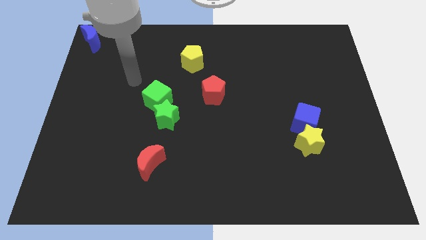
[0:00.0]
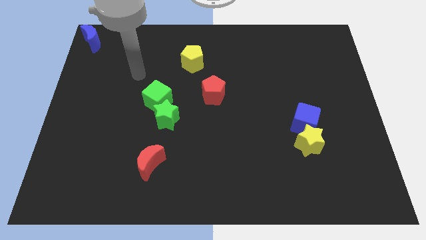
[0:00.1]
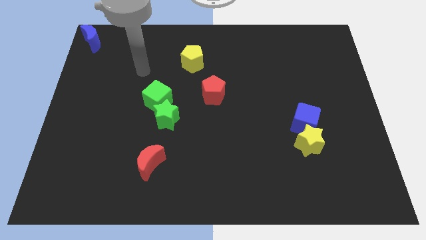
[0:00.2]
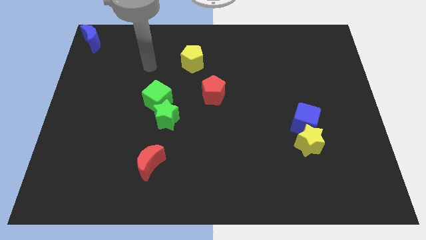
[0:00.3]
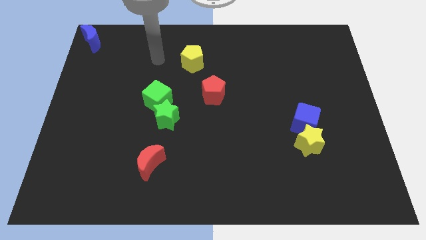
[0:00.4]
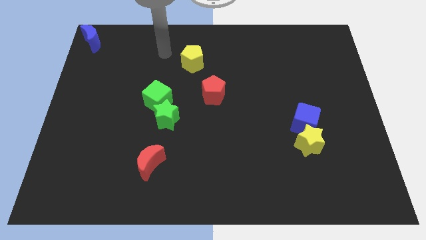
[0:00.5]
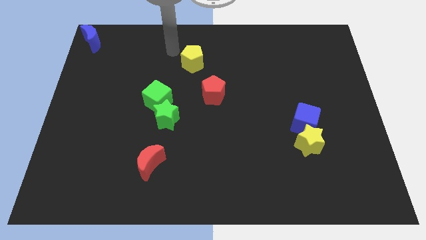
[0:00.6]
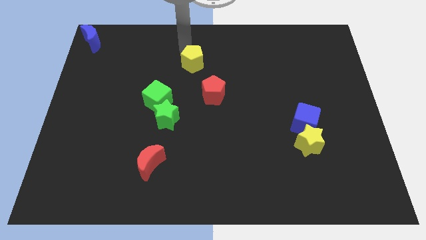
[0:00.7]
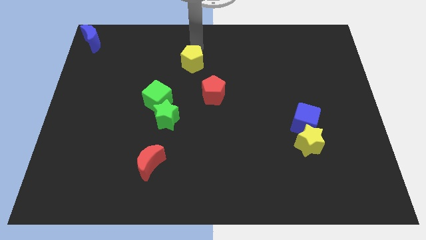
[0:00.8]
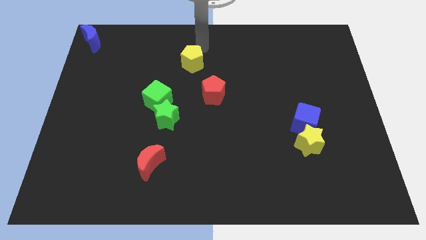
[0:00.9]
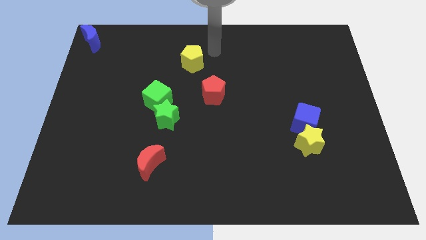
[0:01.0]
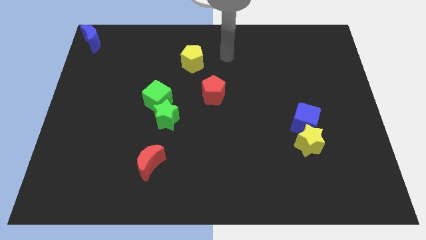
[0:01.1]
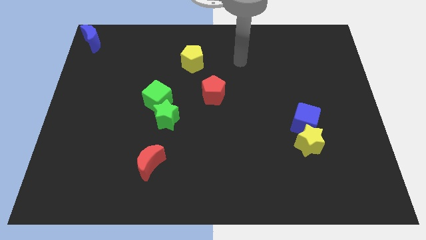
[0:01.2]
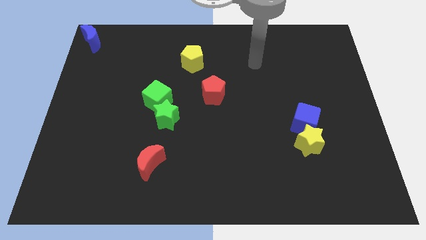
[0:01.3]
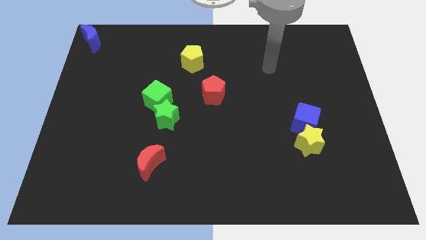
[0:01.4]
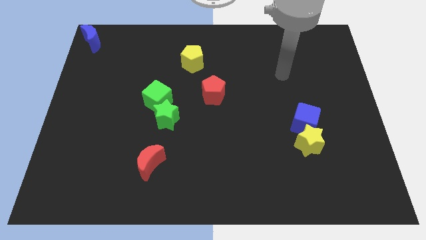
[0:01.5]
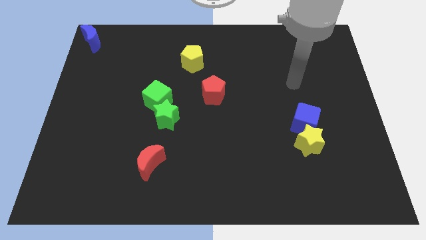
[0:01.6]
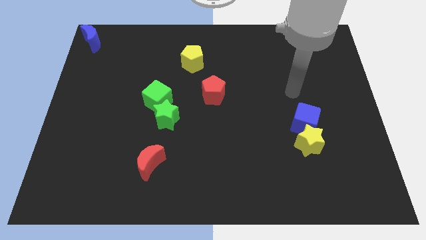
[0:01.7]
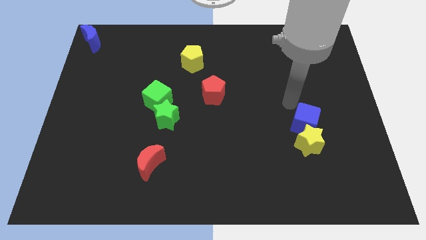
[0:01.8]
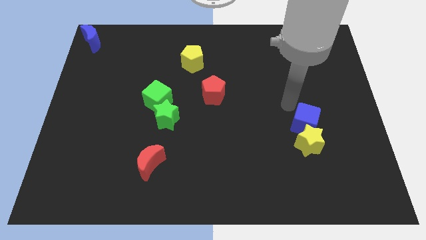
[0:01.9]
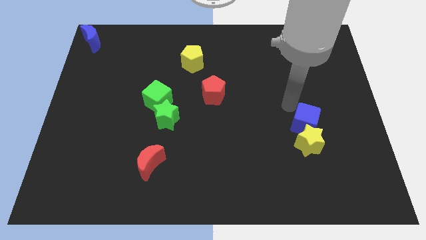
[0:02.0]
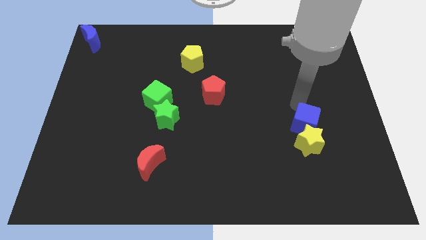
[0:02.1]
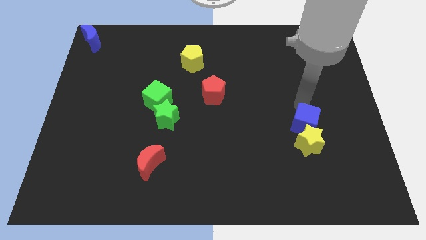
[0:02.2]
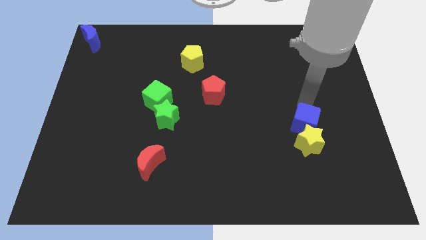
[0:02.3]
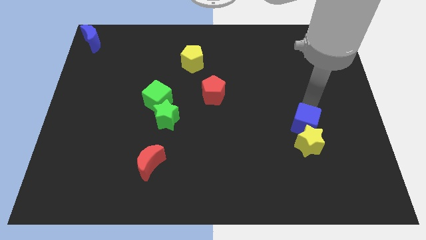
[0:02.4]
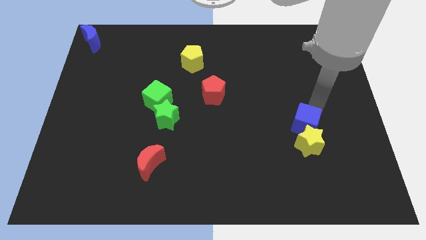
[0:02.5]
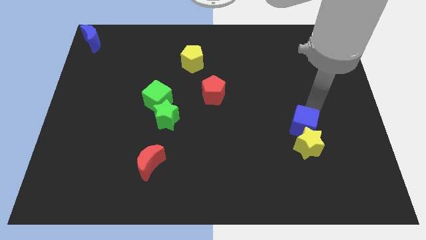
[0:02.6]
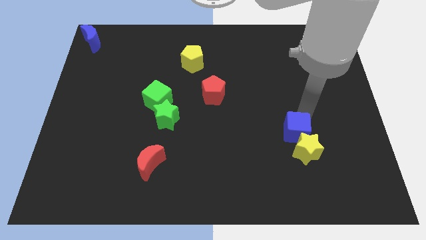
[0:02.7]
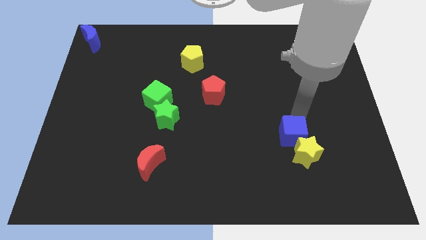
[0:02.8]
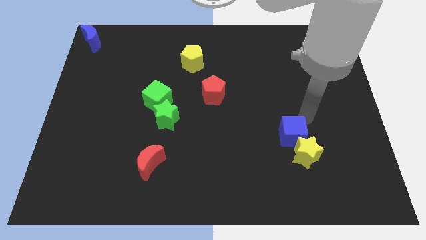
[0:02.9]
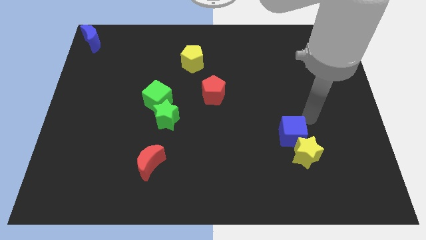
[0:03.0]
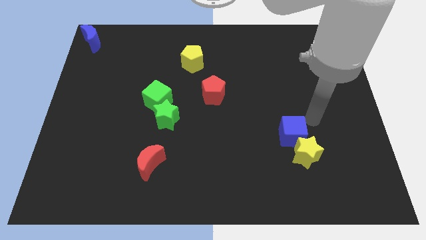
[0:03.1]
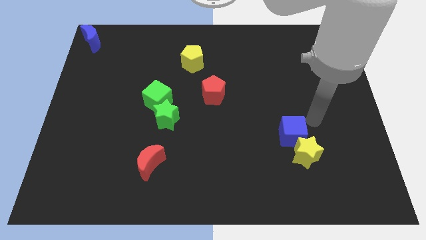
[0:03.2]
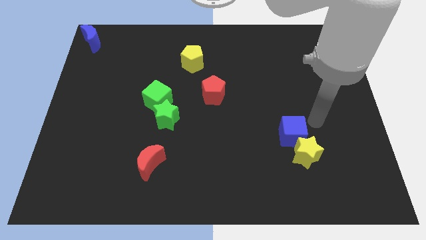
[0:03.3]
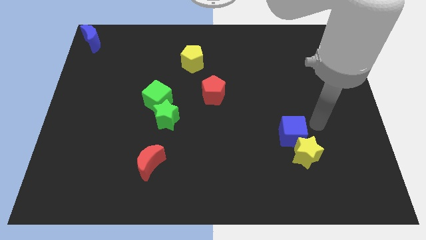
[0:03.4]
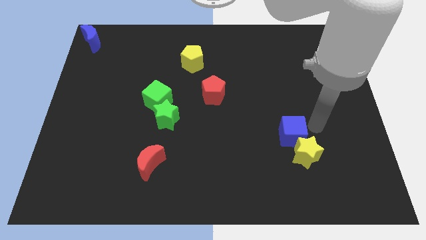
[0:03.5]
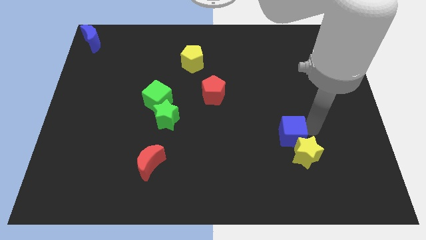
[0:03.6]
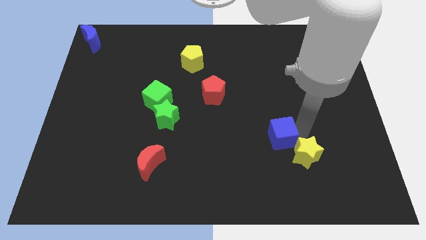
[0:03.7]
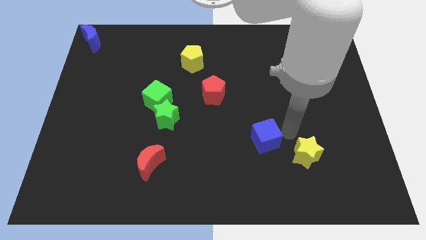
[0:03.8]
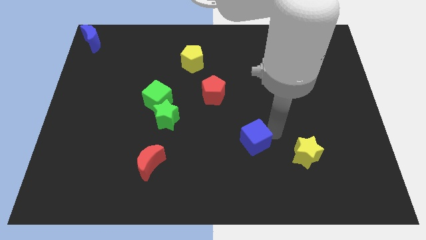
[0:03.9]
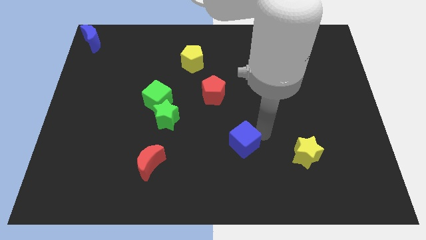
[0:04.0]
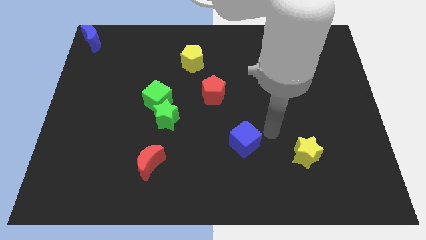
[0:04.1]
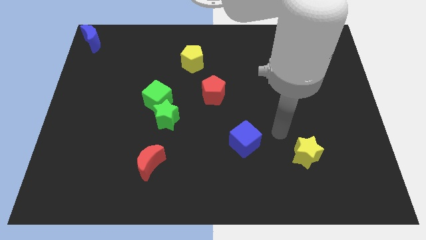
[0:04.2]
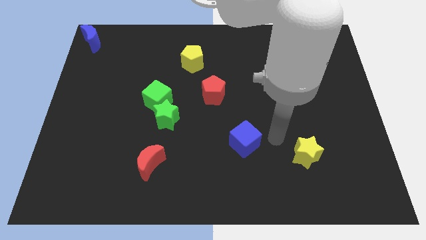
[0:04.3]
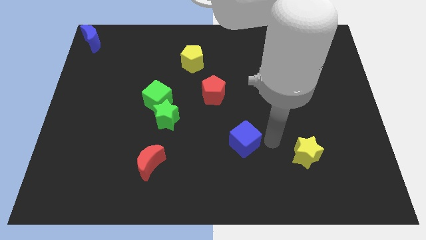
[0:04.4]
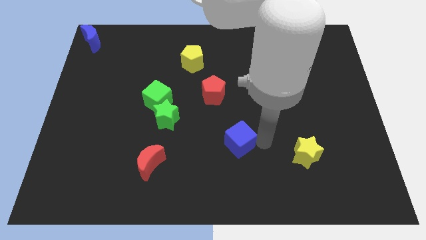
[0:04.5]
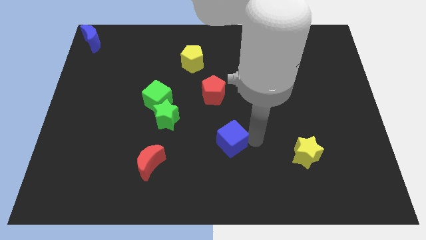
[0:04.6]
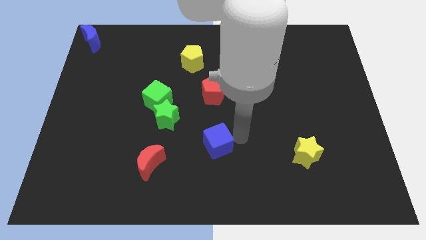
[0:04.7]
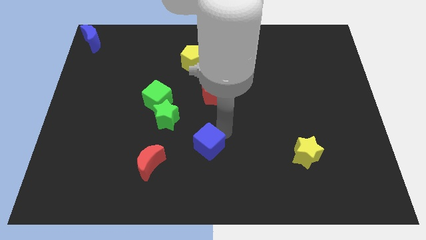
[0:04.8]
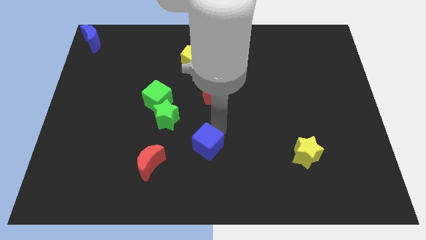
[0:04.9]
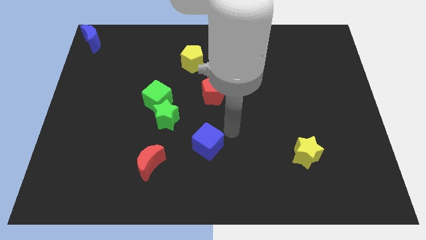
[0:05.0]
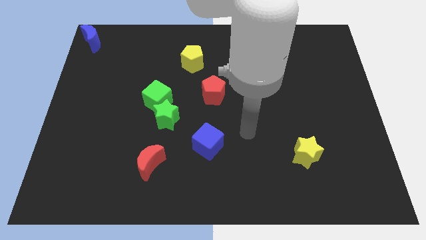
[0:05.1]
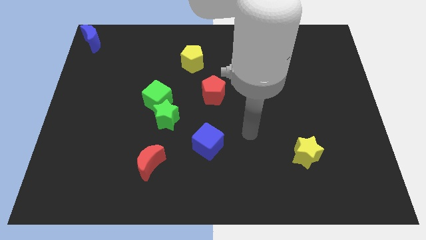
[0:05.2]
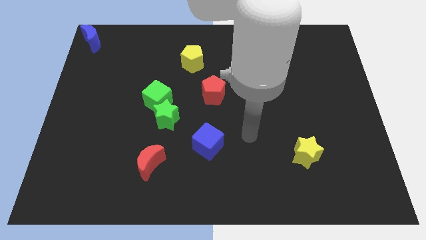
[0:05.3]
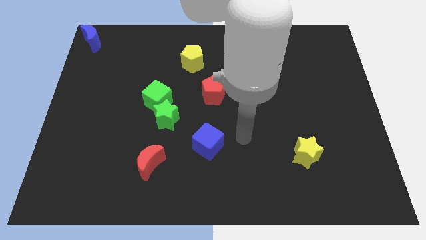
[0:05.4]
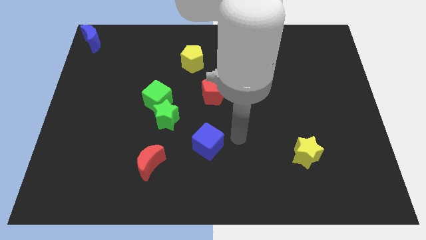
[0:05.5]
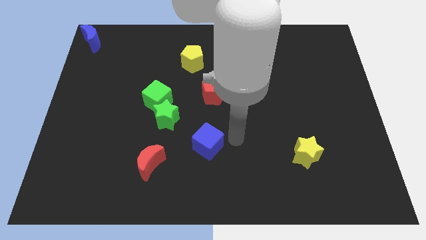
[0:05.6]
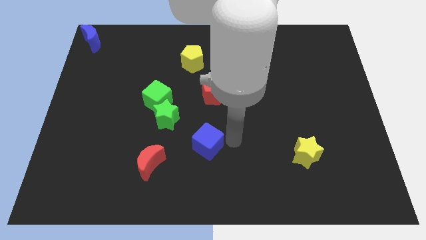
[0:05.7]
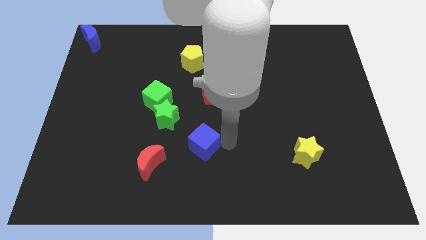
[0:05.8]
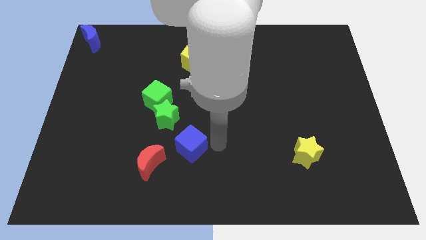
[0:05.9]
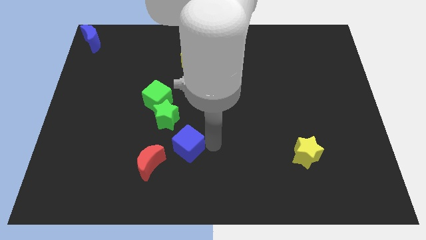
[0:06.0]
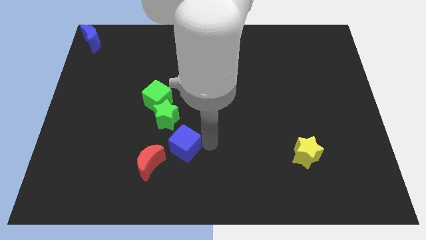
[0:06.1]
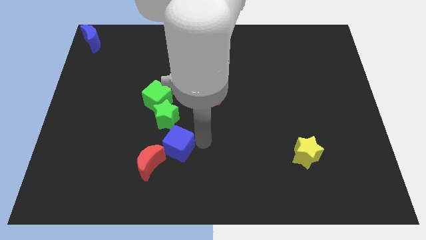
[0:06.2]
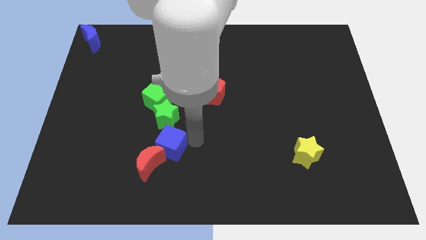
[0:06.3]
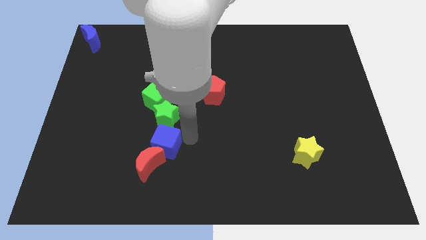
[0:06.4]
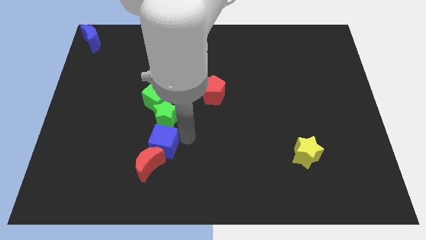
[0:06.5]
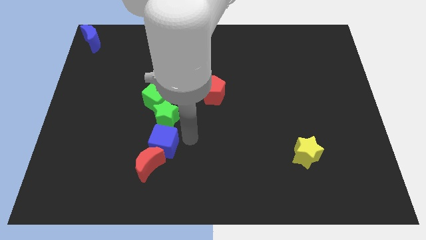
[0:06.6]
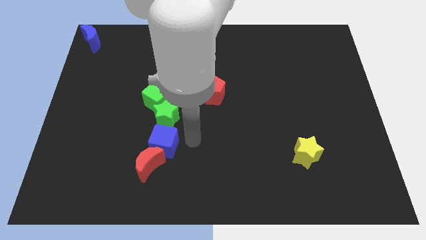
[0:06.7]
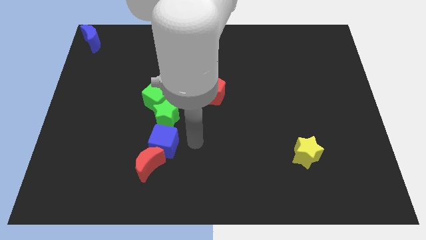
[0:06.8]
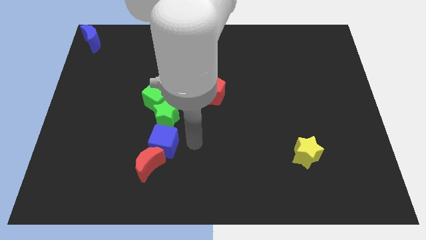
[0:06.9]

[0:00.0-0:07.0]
place the blue cube in between the green star and red moon

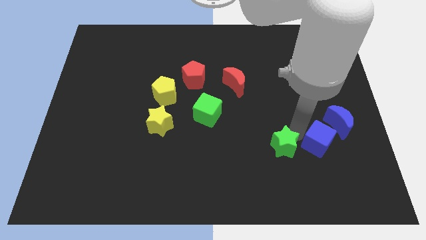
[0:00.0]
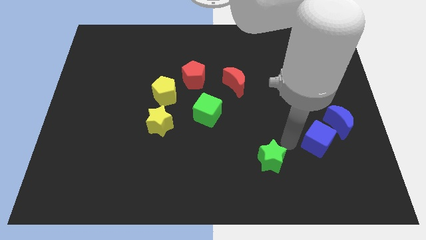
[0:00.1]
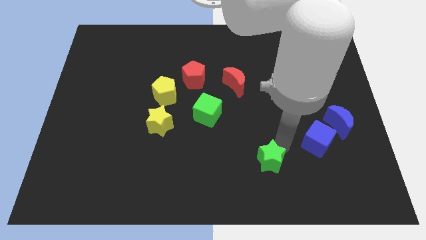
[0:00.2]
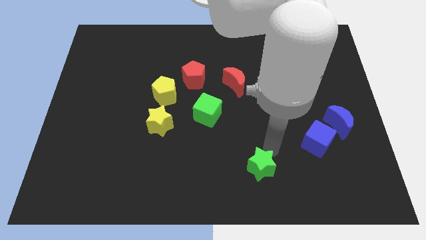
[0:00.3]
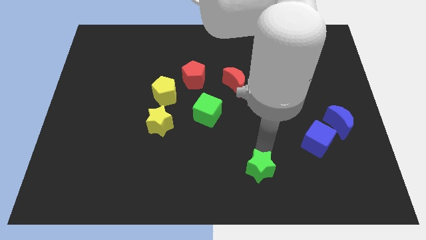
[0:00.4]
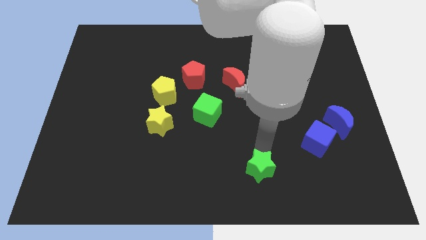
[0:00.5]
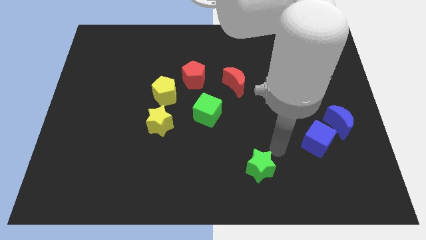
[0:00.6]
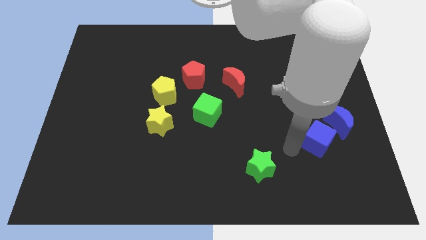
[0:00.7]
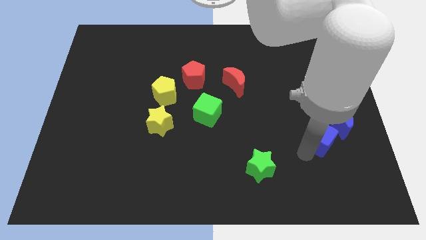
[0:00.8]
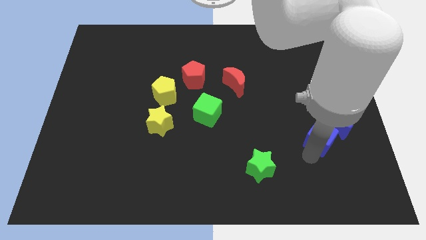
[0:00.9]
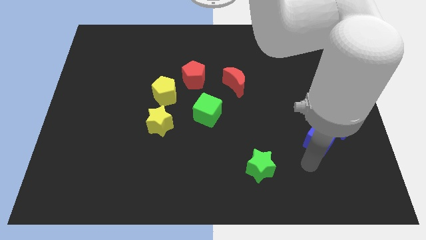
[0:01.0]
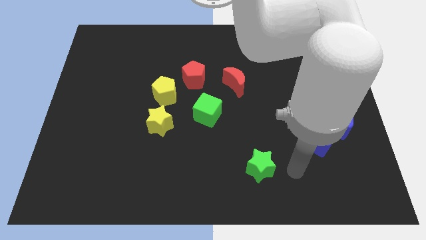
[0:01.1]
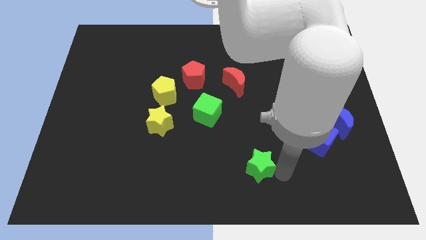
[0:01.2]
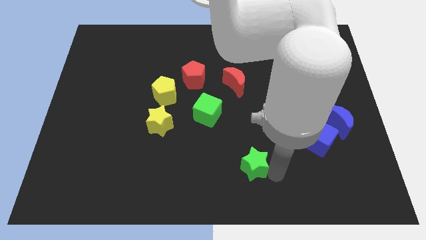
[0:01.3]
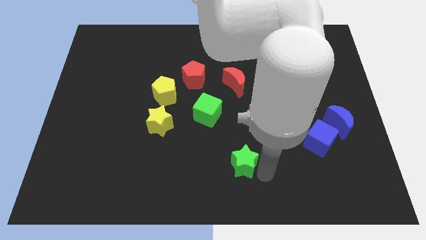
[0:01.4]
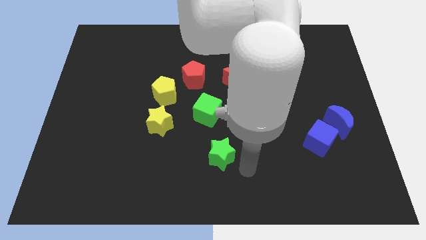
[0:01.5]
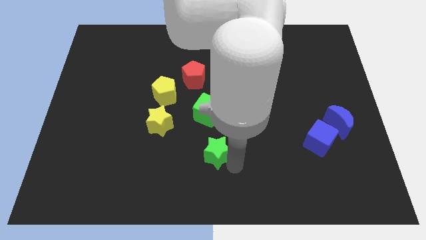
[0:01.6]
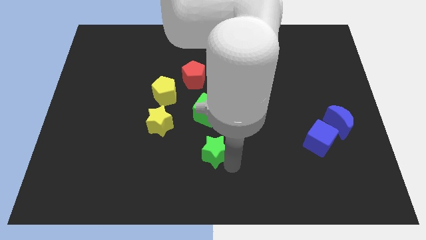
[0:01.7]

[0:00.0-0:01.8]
move green star away from the blue cube

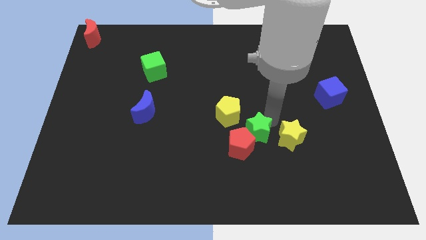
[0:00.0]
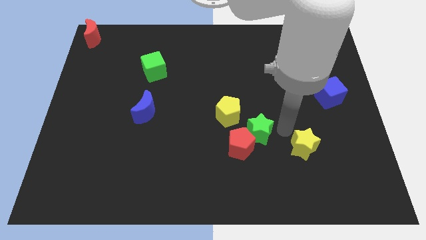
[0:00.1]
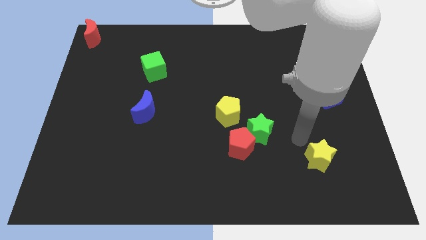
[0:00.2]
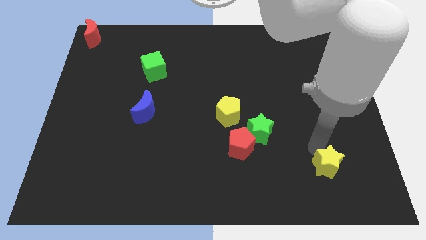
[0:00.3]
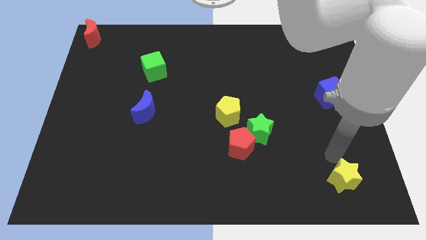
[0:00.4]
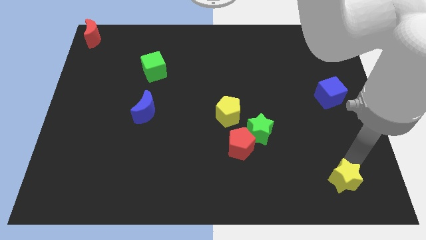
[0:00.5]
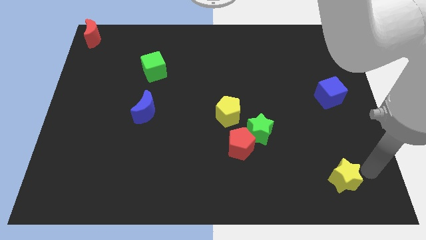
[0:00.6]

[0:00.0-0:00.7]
separate yellow star from green star
